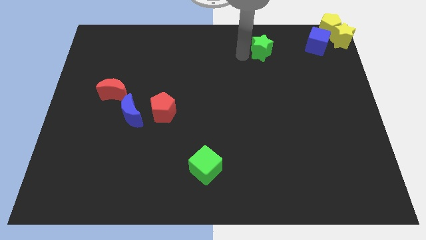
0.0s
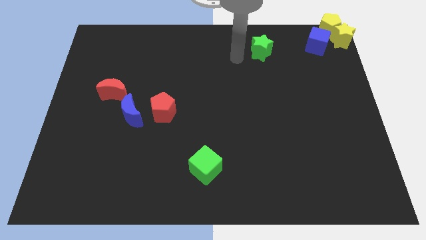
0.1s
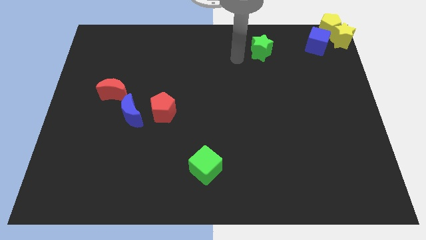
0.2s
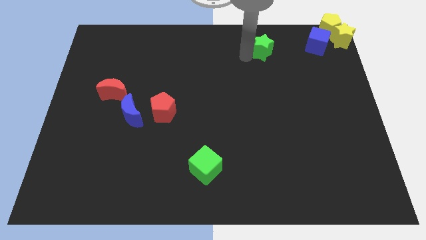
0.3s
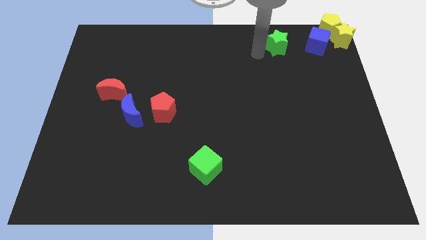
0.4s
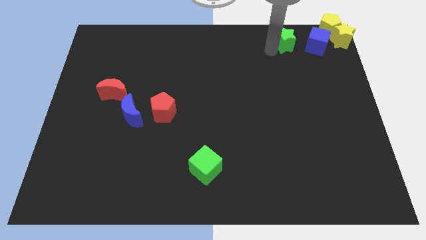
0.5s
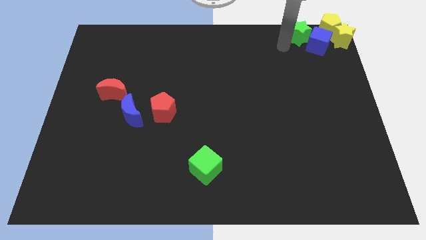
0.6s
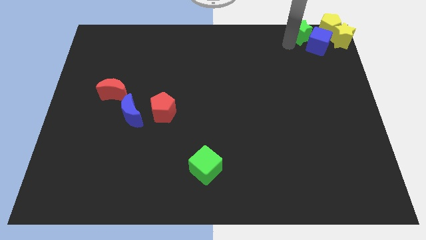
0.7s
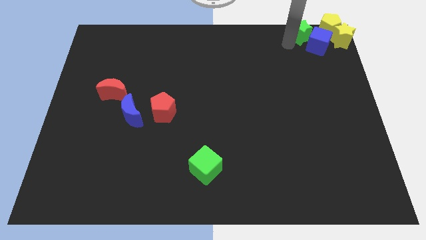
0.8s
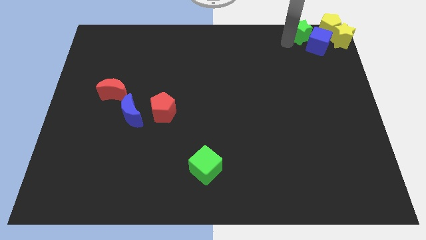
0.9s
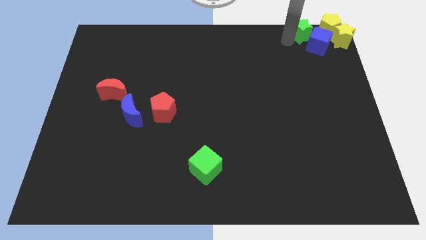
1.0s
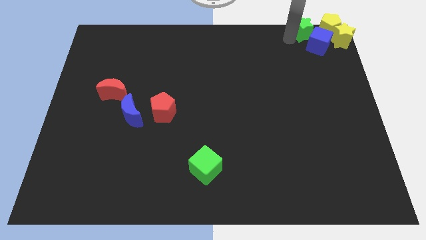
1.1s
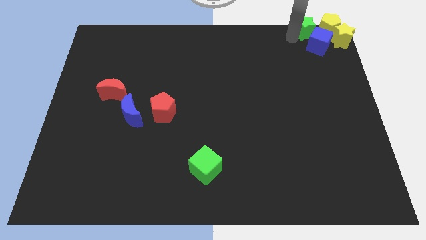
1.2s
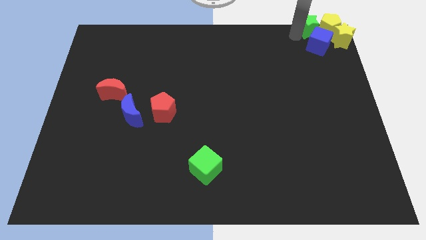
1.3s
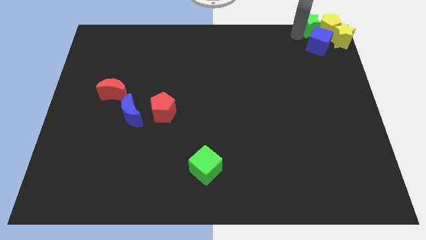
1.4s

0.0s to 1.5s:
push the green star into the blue cube

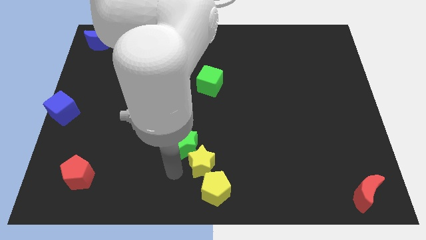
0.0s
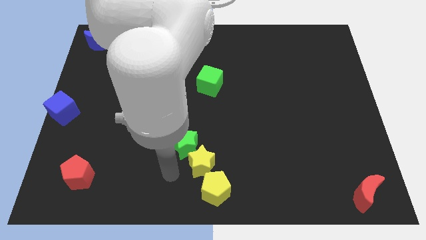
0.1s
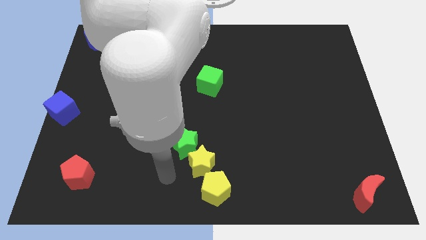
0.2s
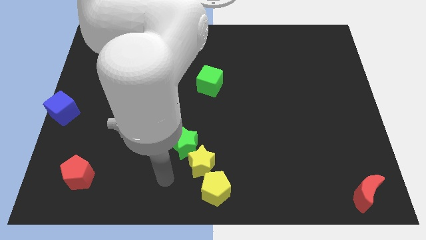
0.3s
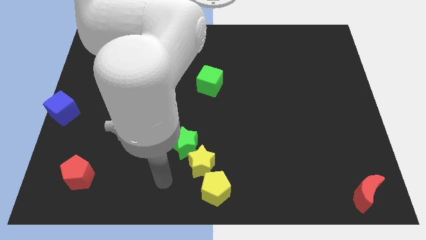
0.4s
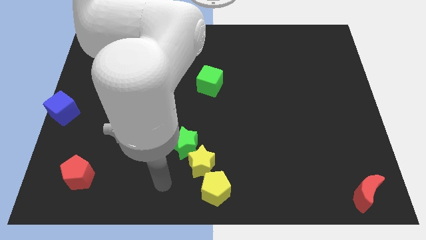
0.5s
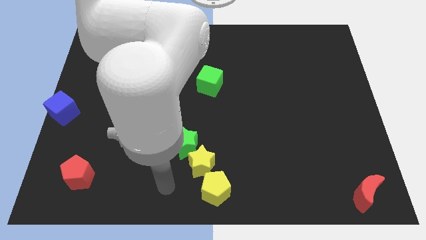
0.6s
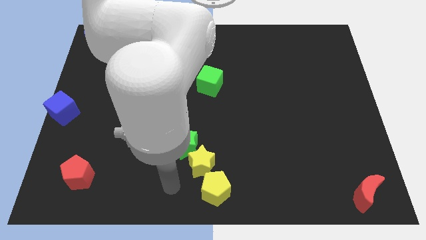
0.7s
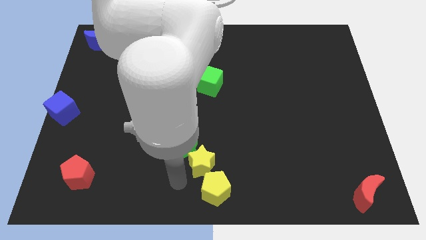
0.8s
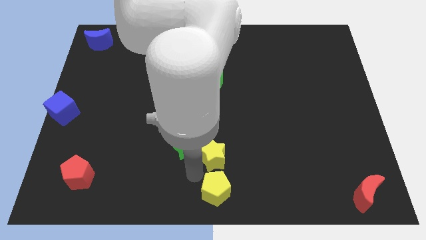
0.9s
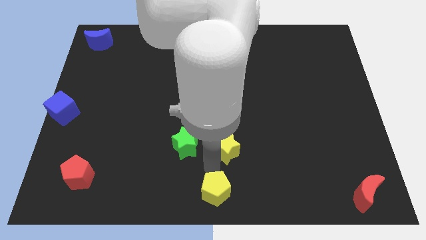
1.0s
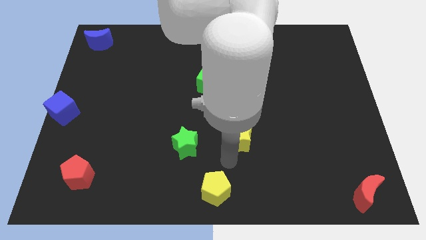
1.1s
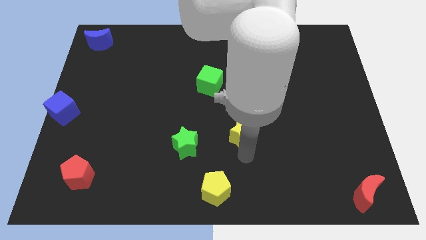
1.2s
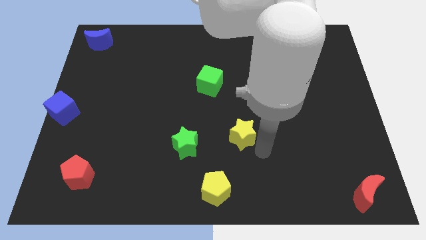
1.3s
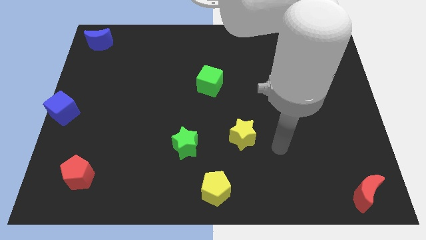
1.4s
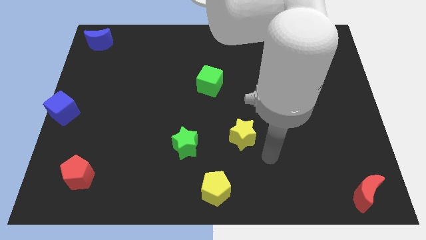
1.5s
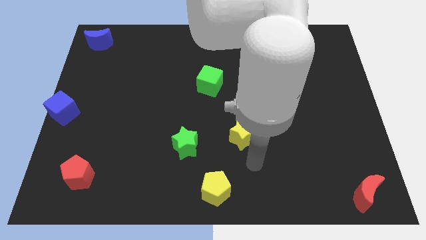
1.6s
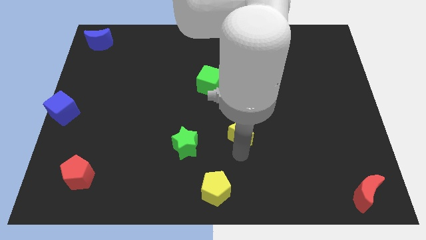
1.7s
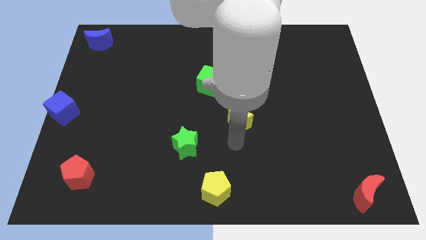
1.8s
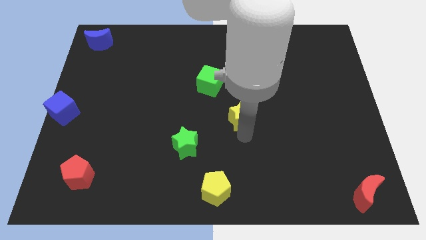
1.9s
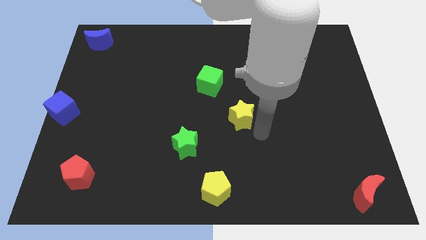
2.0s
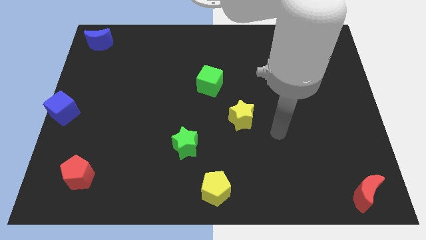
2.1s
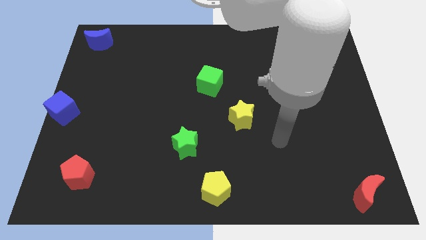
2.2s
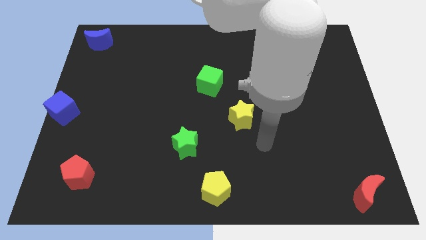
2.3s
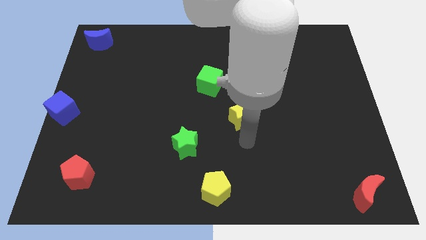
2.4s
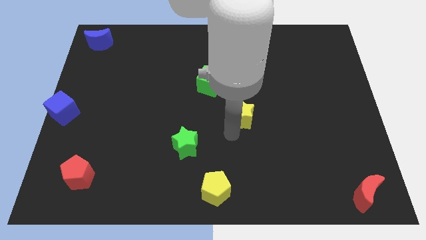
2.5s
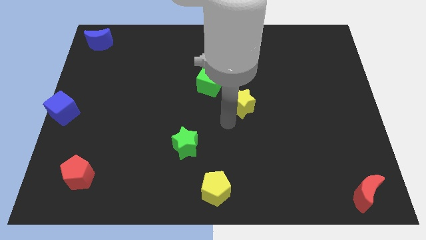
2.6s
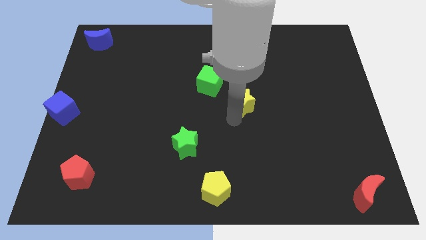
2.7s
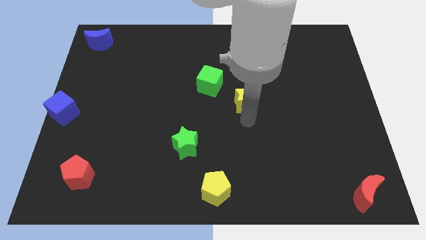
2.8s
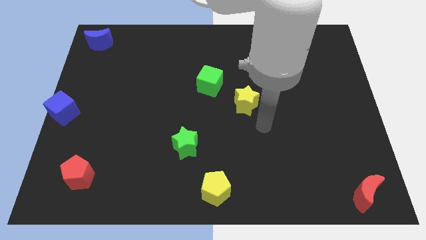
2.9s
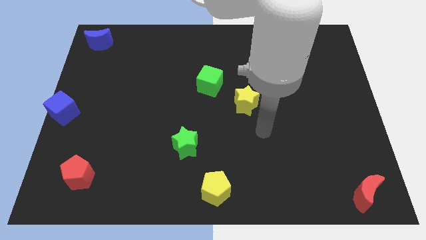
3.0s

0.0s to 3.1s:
separate yellow star from green star

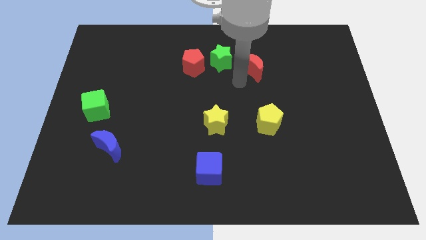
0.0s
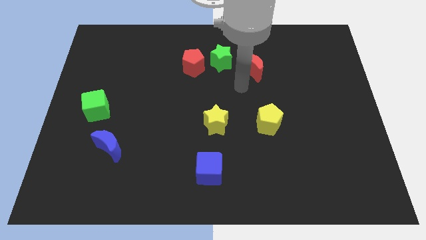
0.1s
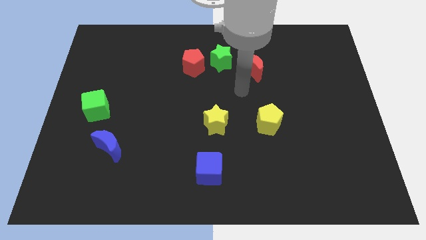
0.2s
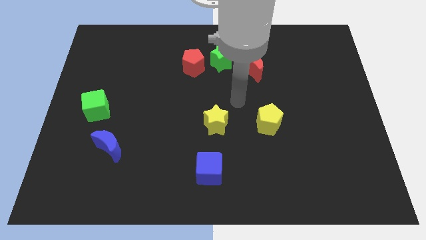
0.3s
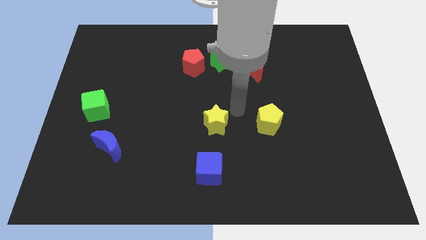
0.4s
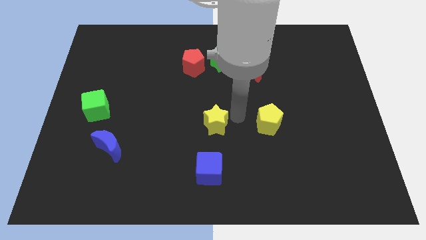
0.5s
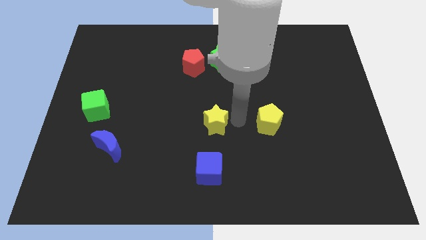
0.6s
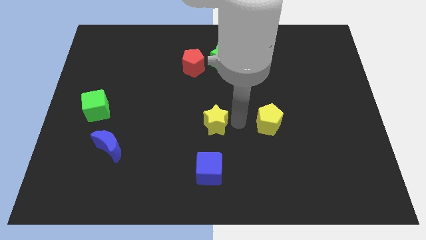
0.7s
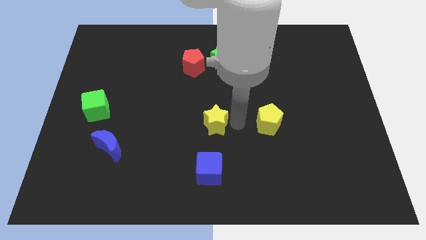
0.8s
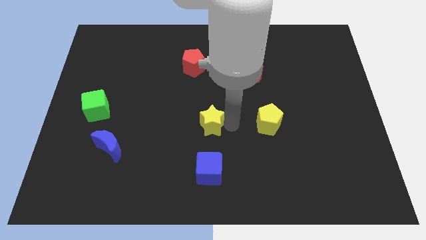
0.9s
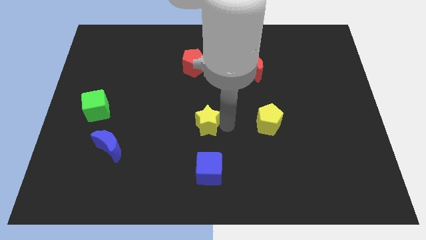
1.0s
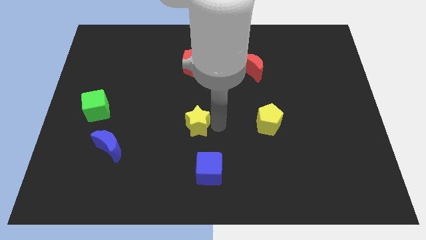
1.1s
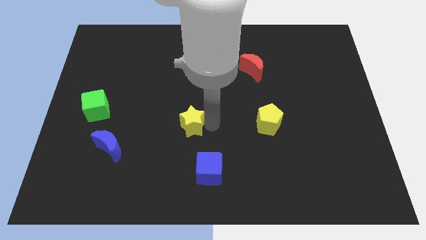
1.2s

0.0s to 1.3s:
move your arm away from the red moon

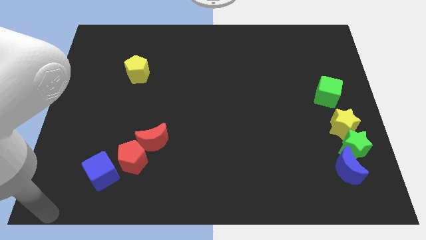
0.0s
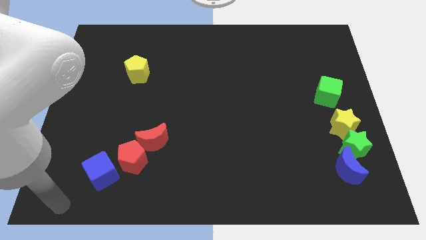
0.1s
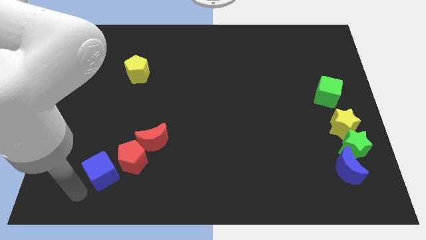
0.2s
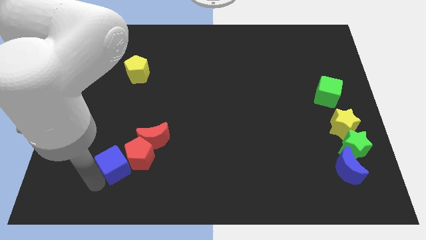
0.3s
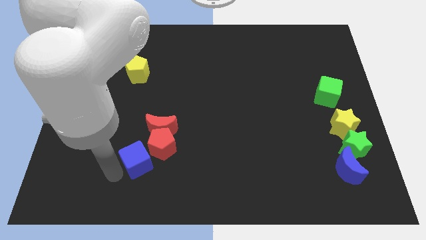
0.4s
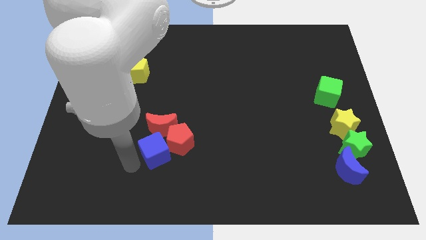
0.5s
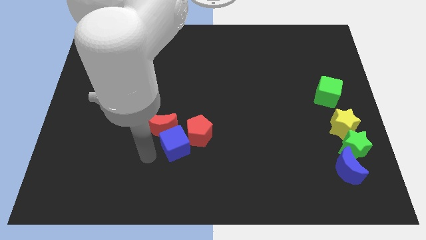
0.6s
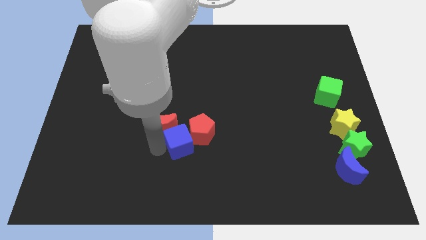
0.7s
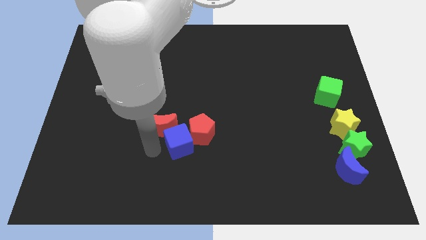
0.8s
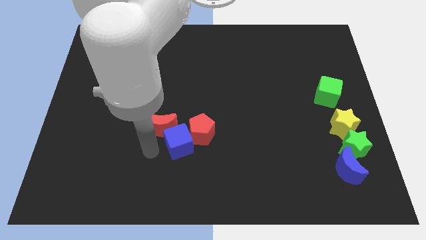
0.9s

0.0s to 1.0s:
push the blue cube into red pentagon

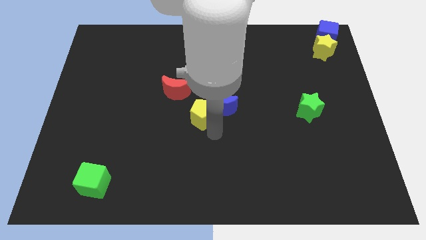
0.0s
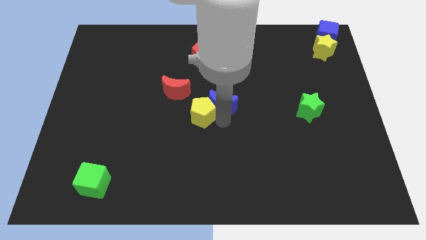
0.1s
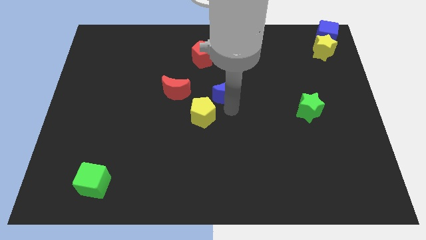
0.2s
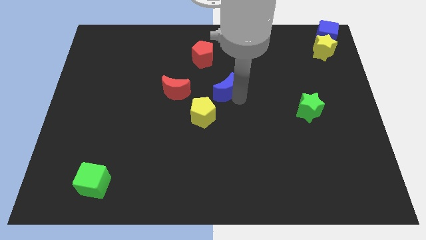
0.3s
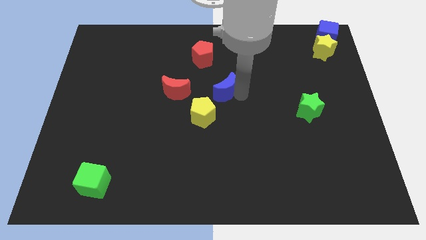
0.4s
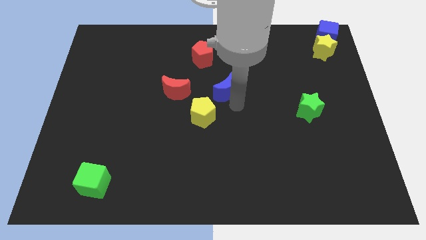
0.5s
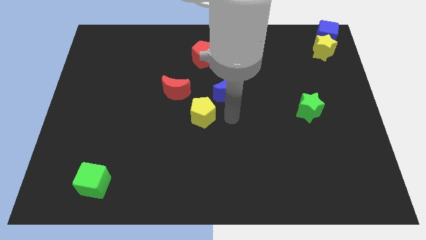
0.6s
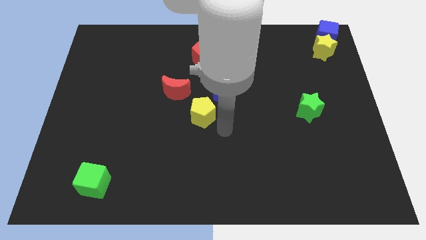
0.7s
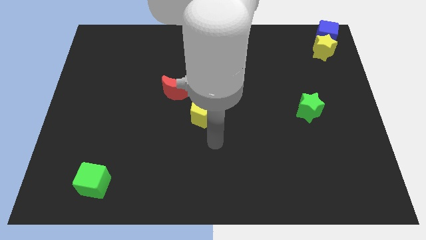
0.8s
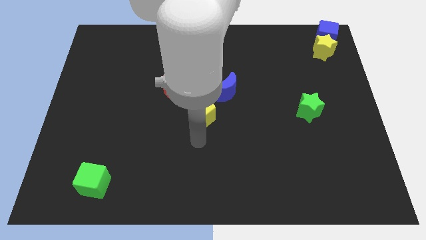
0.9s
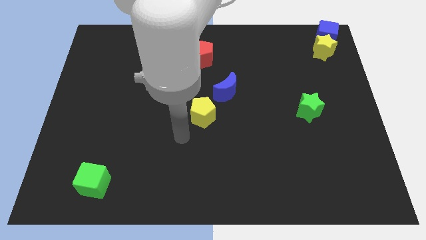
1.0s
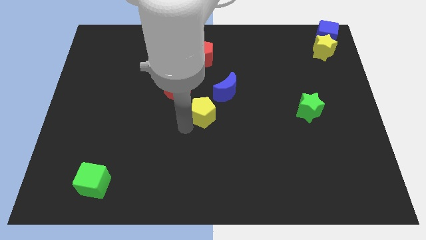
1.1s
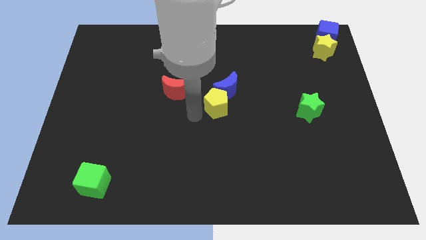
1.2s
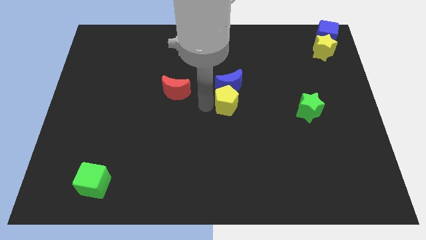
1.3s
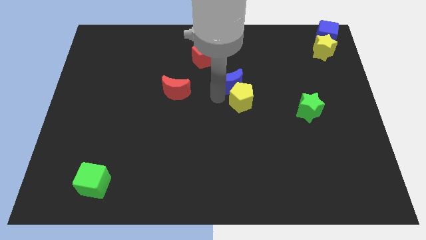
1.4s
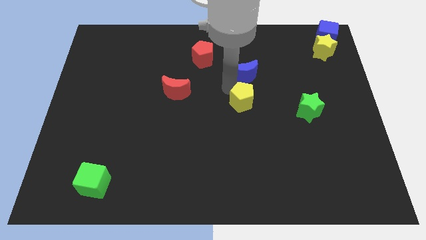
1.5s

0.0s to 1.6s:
place the yellow pentagon in between the red crescent and the green star

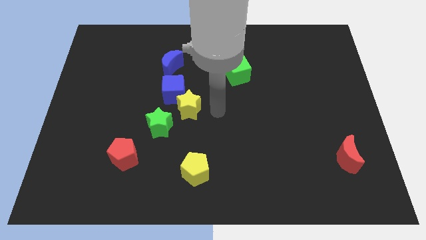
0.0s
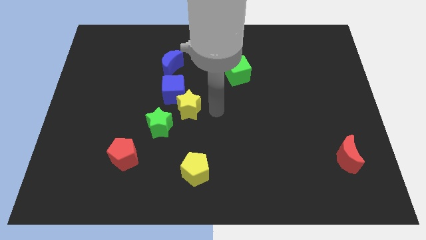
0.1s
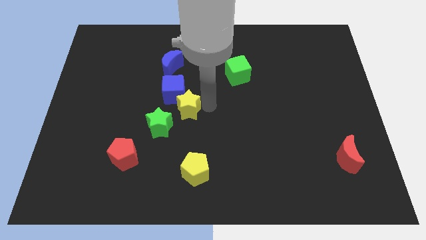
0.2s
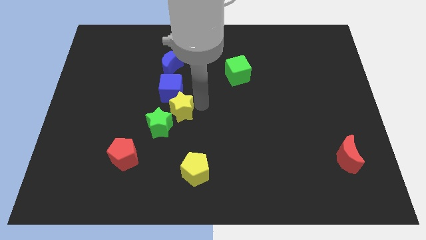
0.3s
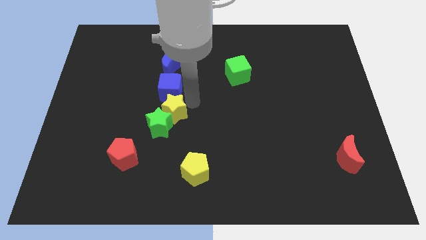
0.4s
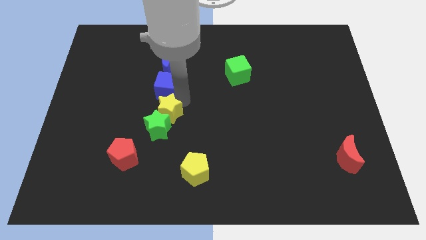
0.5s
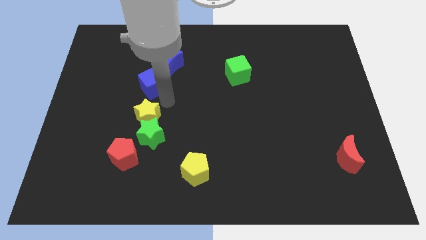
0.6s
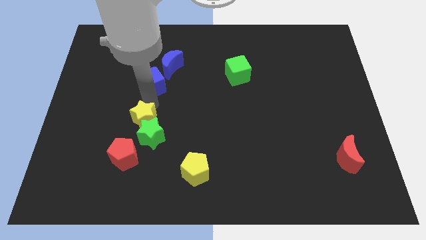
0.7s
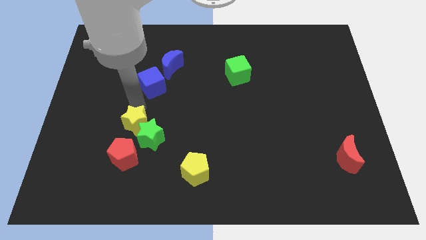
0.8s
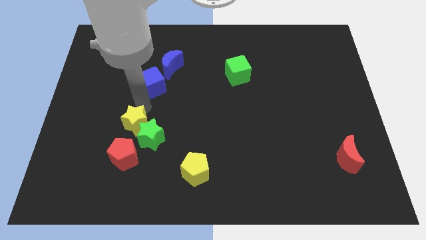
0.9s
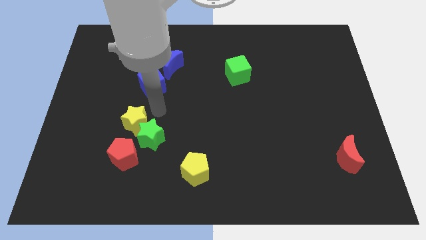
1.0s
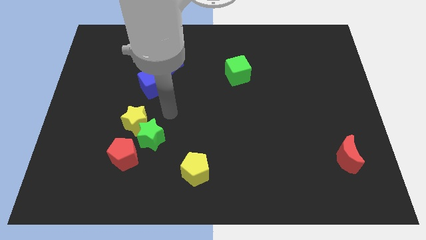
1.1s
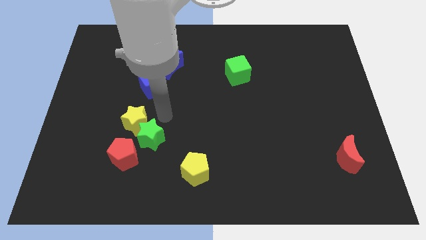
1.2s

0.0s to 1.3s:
move the yellow star to the top left of the green star
